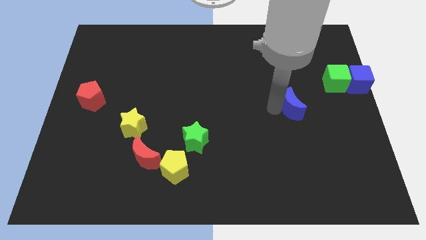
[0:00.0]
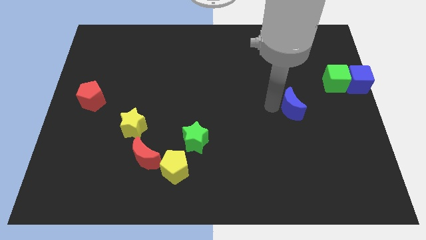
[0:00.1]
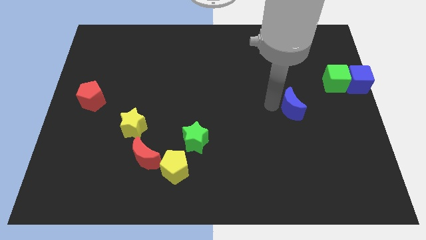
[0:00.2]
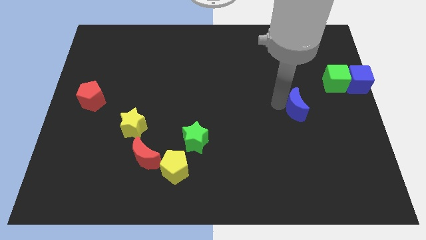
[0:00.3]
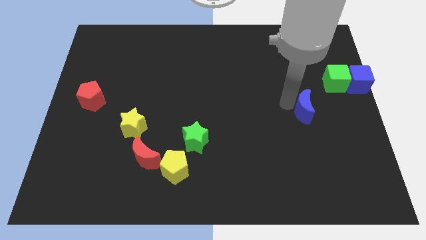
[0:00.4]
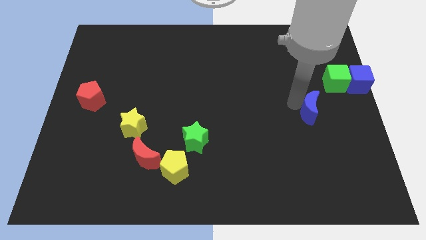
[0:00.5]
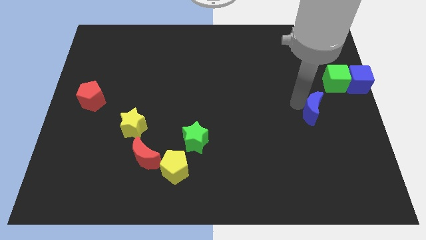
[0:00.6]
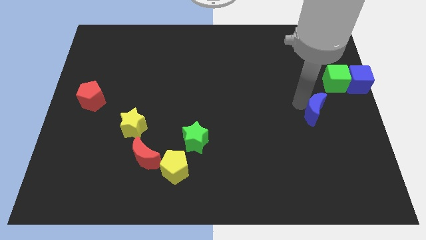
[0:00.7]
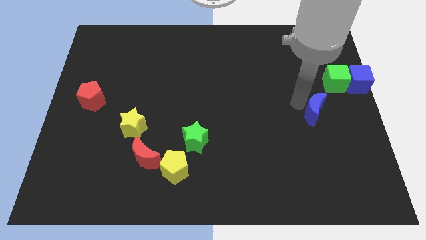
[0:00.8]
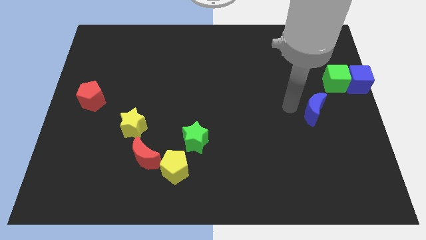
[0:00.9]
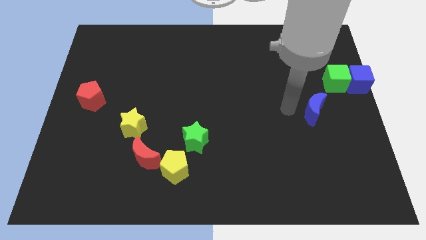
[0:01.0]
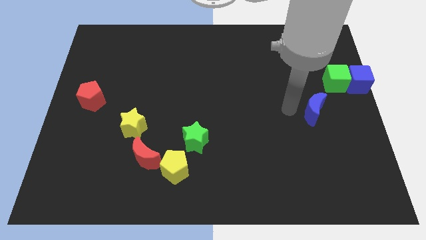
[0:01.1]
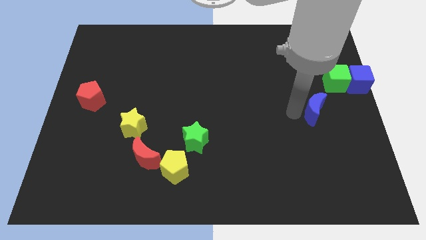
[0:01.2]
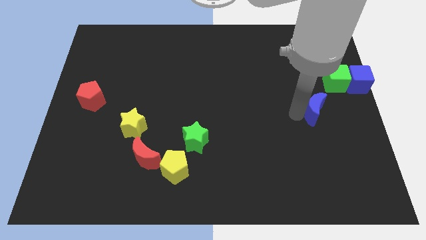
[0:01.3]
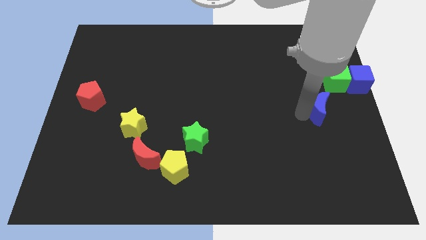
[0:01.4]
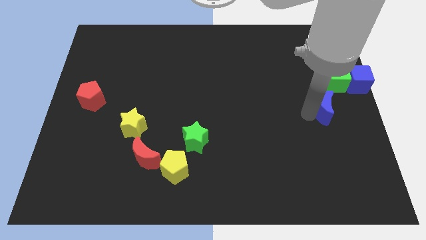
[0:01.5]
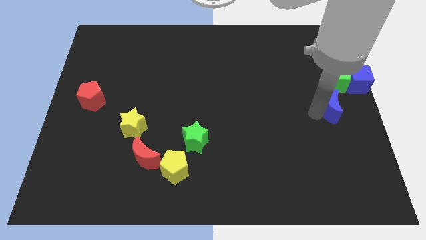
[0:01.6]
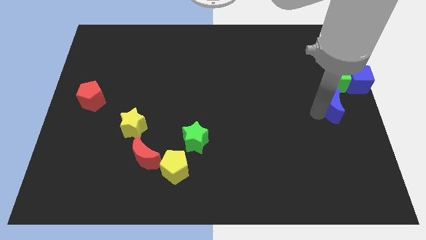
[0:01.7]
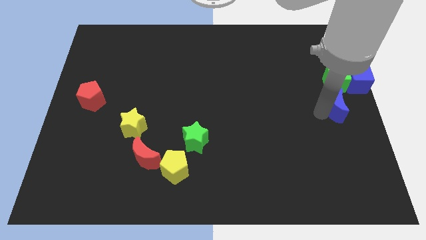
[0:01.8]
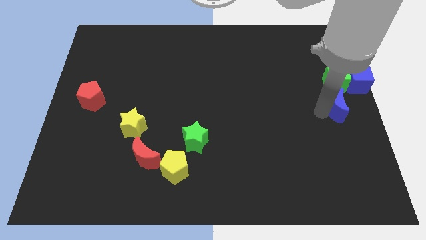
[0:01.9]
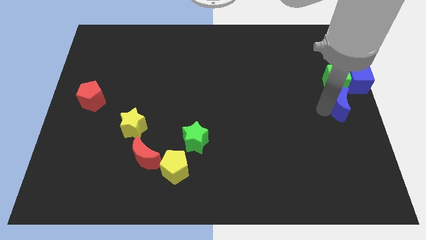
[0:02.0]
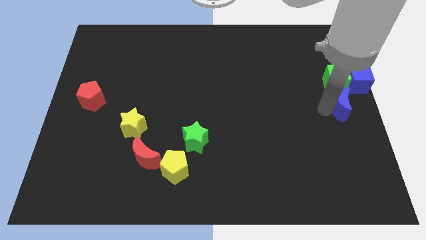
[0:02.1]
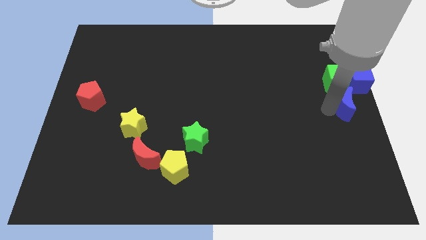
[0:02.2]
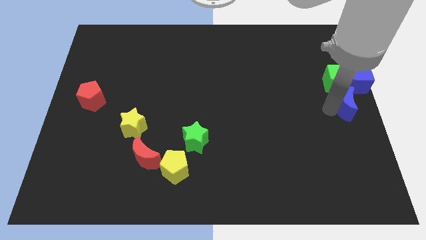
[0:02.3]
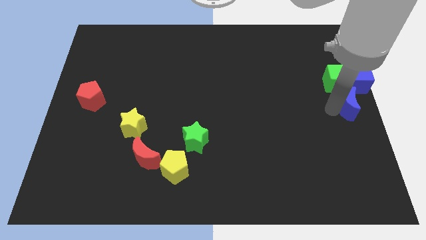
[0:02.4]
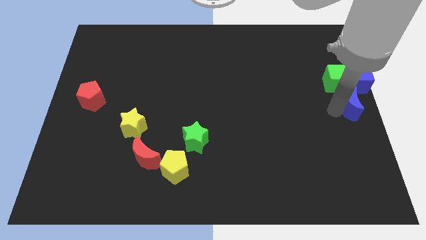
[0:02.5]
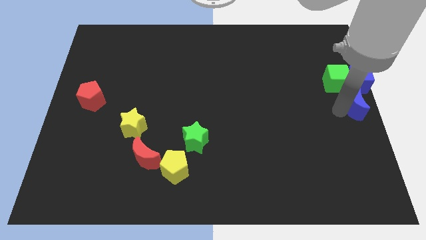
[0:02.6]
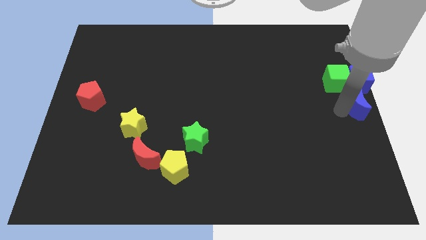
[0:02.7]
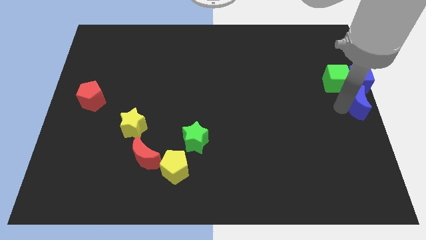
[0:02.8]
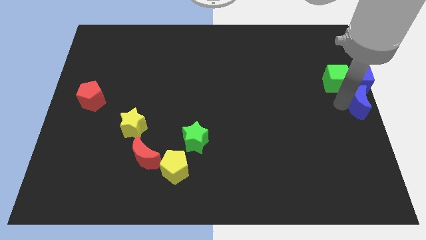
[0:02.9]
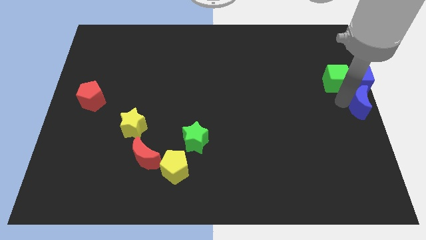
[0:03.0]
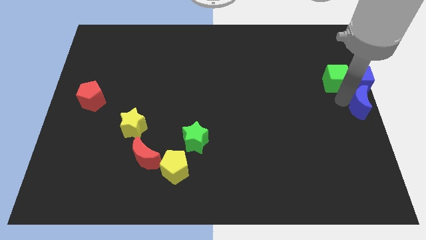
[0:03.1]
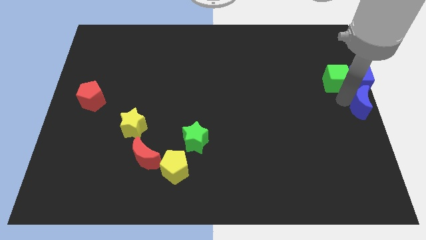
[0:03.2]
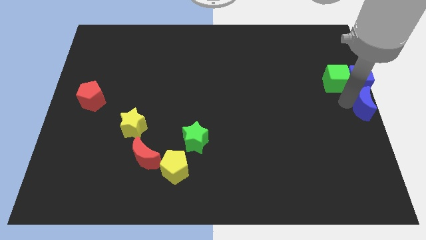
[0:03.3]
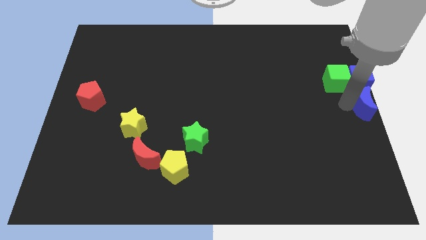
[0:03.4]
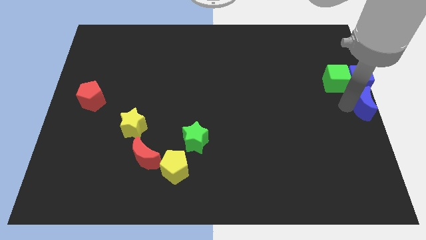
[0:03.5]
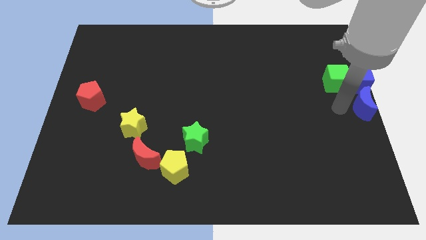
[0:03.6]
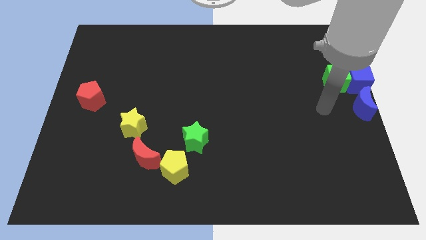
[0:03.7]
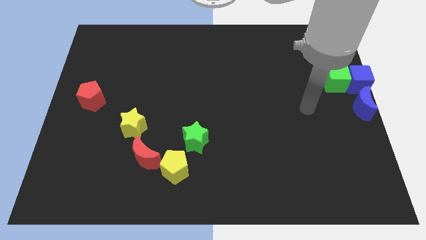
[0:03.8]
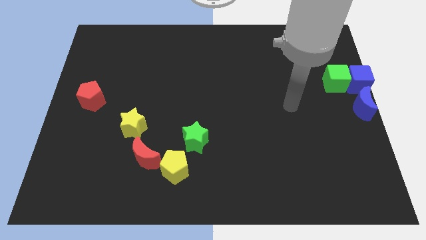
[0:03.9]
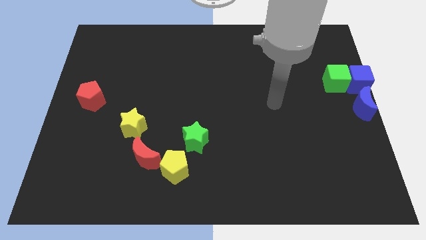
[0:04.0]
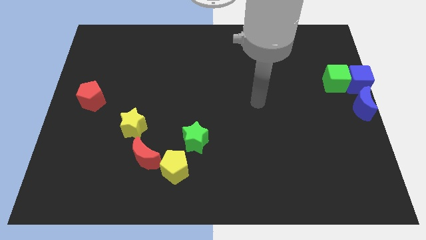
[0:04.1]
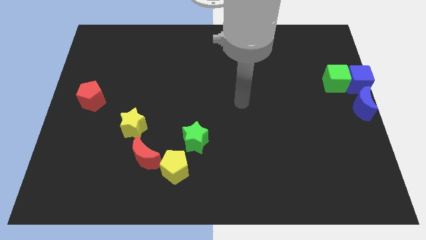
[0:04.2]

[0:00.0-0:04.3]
put the blue crescent vertically below the blue cube

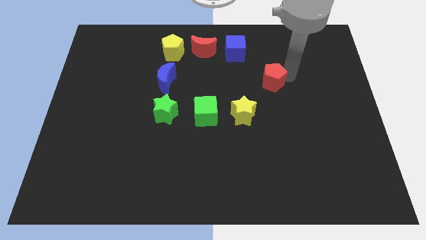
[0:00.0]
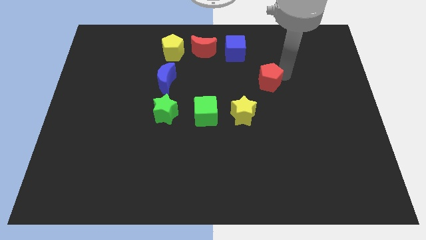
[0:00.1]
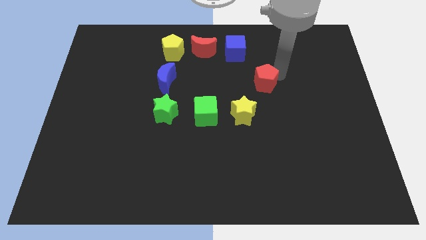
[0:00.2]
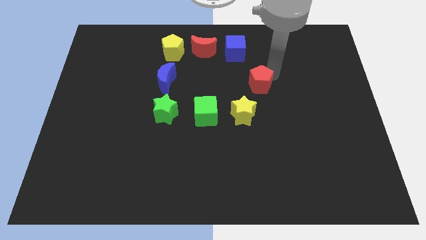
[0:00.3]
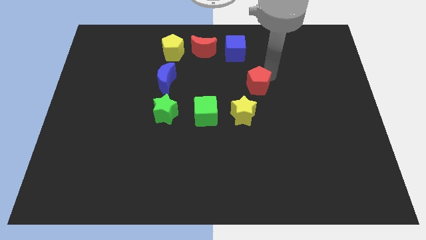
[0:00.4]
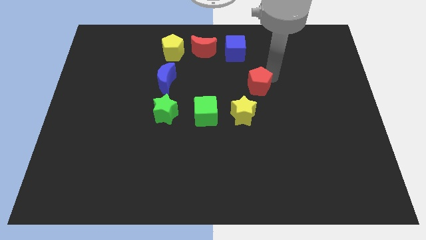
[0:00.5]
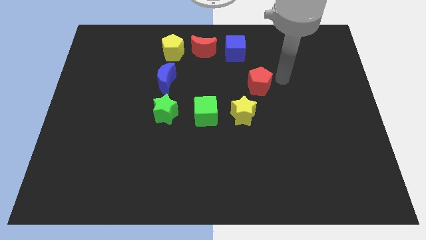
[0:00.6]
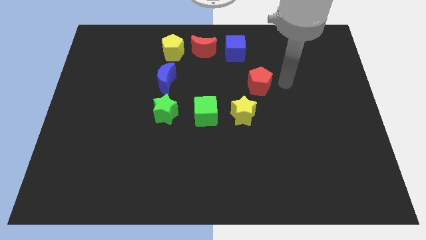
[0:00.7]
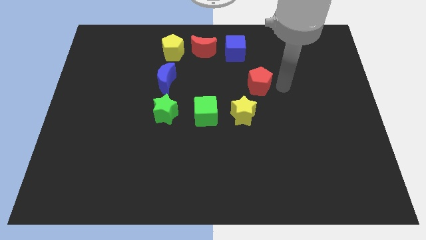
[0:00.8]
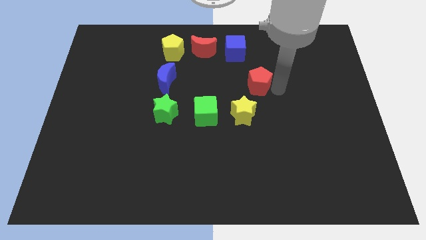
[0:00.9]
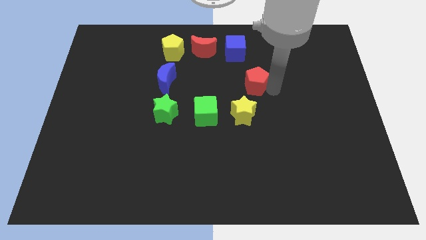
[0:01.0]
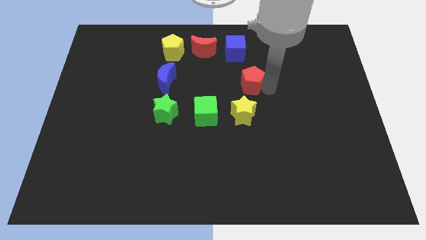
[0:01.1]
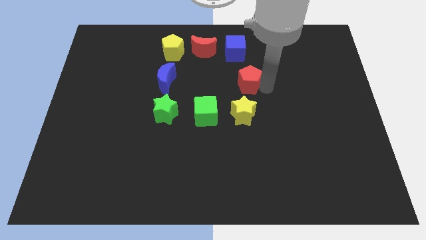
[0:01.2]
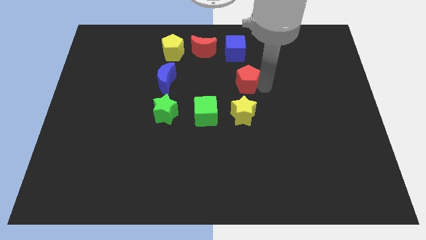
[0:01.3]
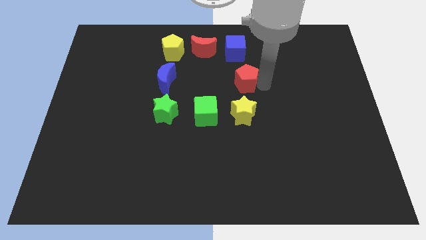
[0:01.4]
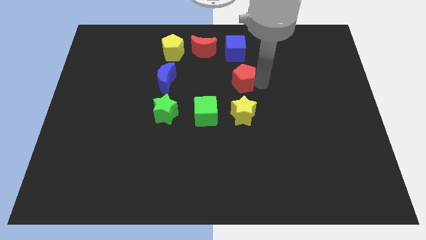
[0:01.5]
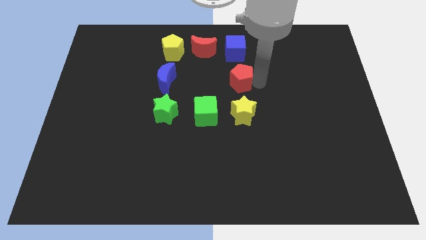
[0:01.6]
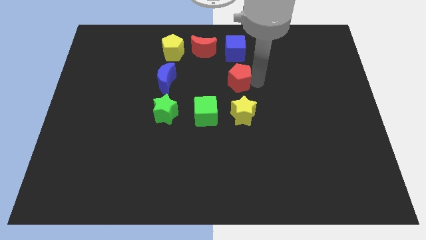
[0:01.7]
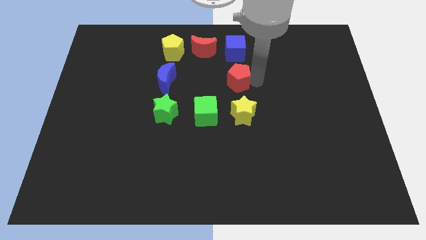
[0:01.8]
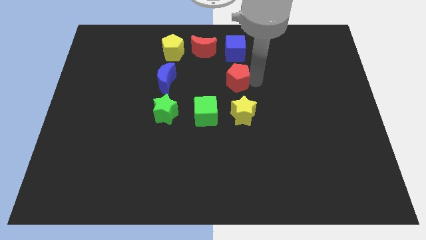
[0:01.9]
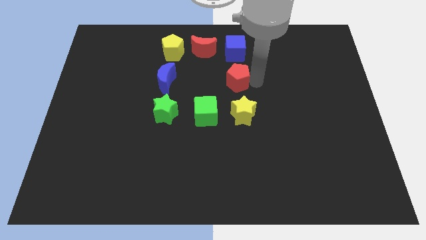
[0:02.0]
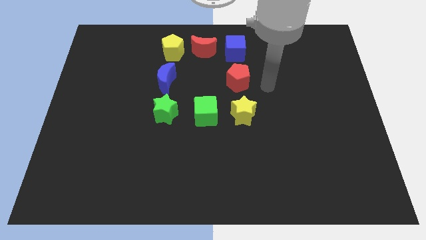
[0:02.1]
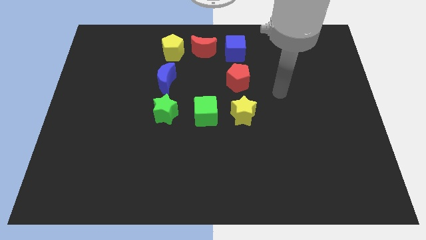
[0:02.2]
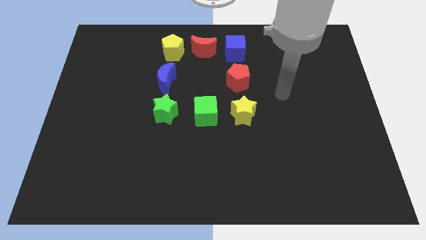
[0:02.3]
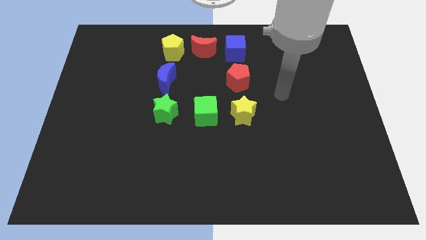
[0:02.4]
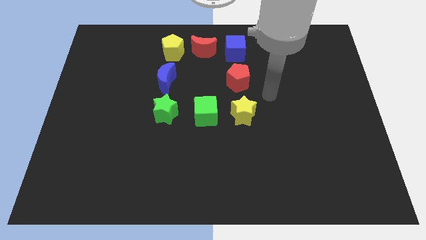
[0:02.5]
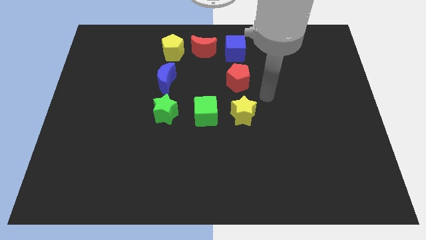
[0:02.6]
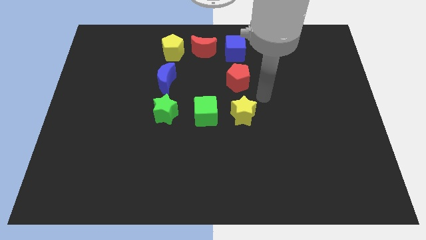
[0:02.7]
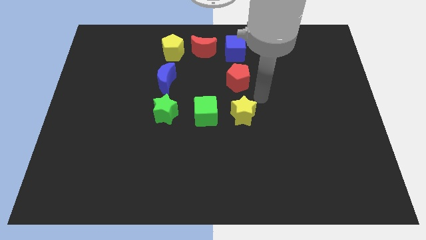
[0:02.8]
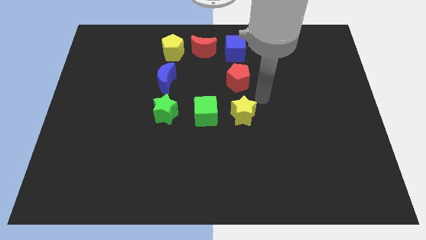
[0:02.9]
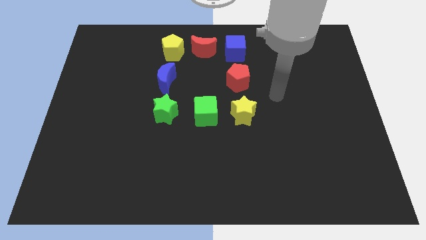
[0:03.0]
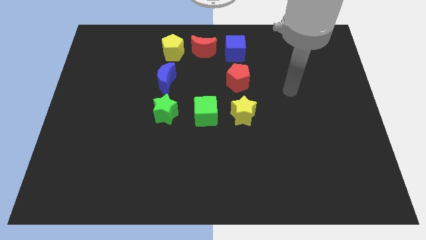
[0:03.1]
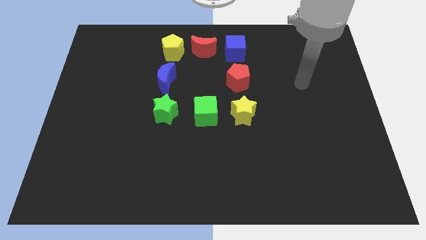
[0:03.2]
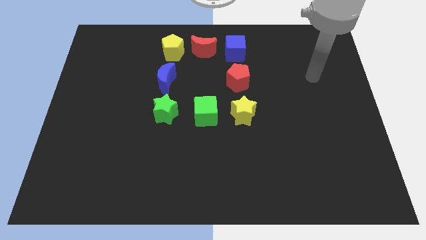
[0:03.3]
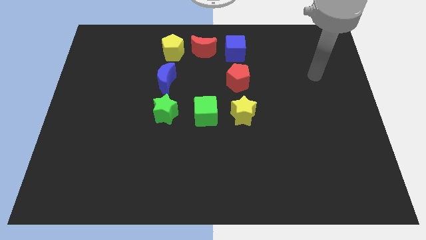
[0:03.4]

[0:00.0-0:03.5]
place the red pentagon to the right of the blue moon

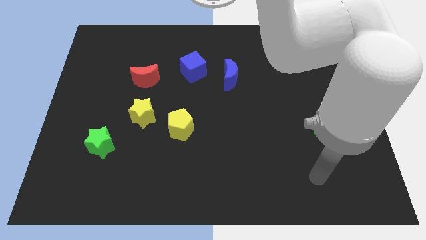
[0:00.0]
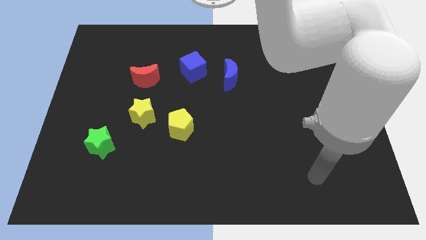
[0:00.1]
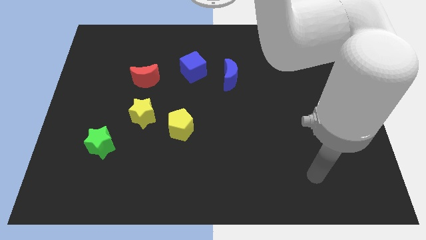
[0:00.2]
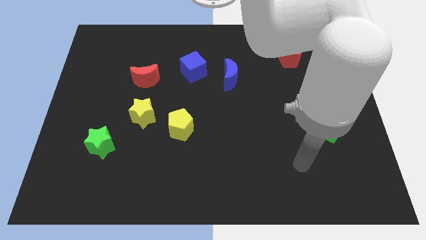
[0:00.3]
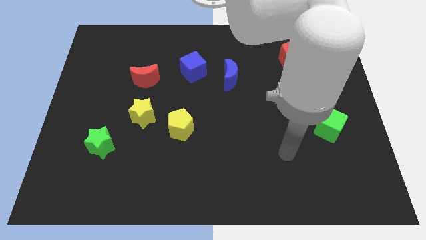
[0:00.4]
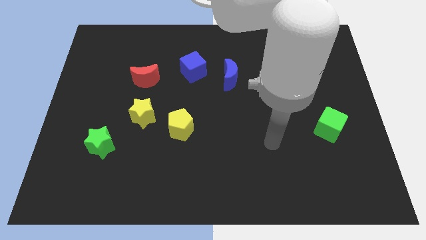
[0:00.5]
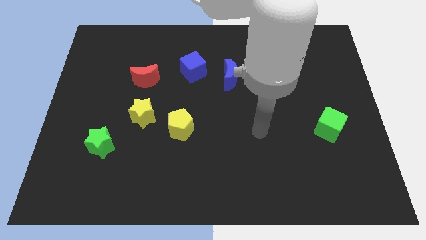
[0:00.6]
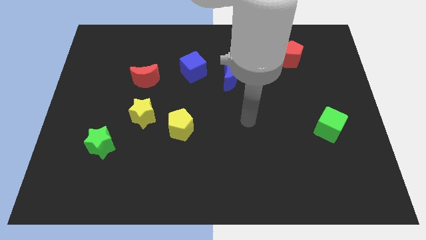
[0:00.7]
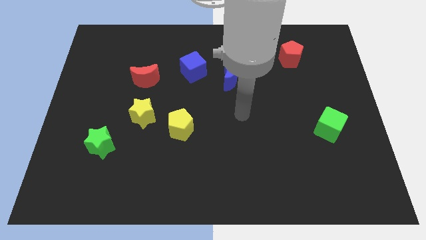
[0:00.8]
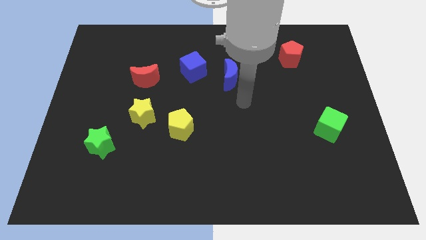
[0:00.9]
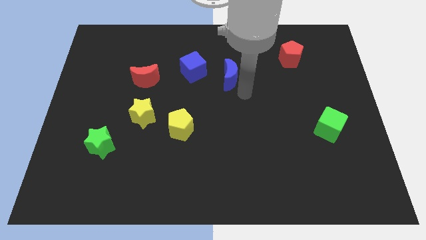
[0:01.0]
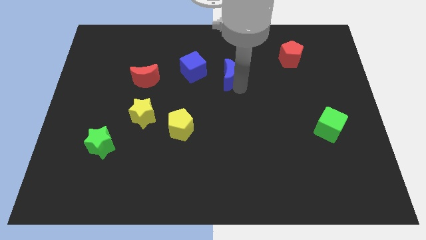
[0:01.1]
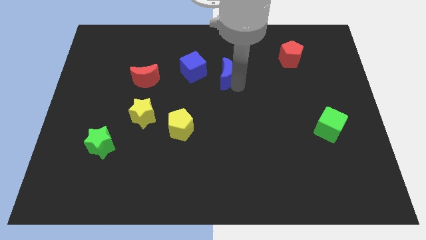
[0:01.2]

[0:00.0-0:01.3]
place your arm to the right of blue moon
